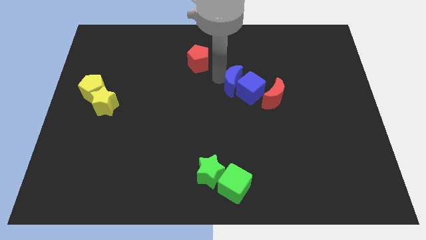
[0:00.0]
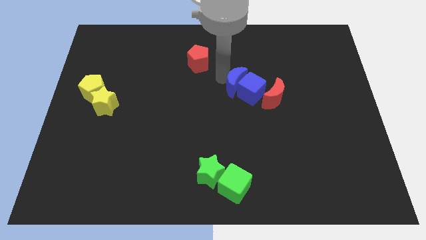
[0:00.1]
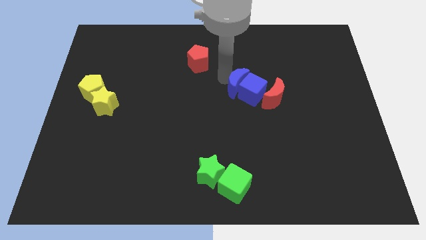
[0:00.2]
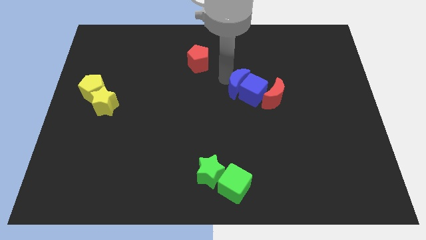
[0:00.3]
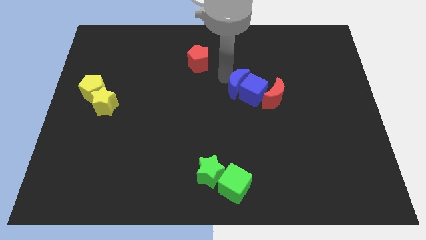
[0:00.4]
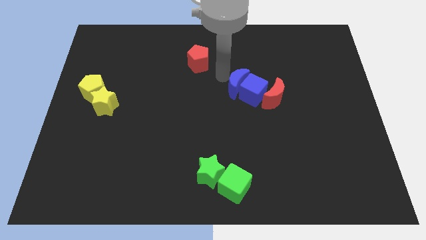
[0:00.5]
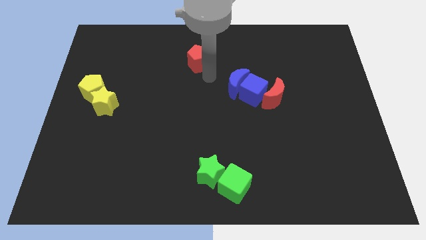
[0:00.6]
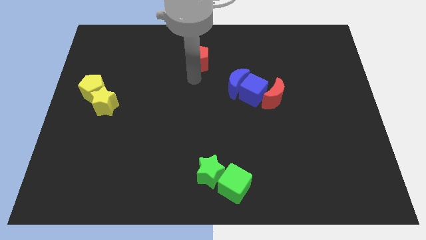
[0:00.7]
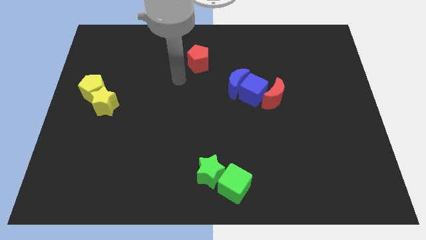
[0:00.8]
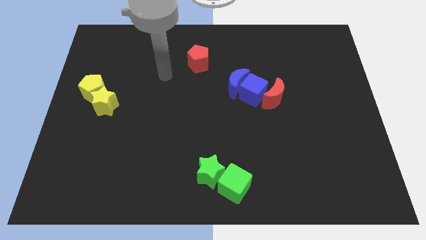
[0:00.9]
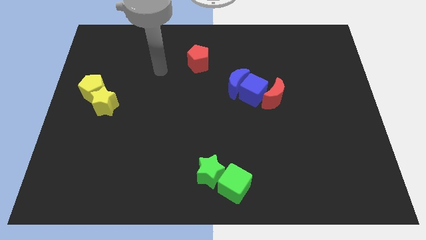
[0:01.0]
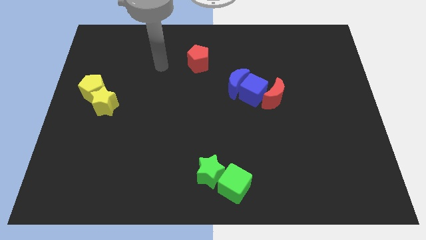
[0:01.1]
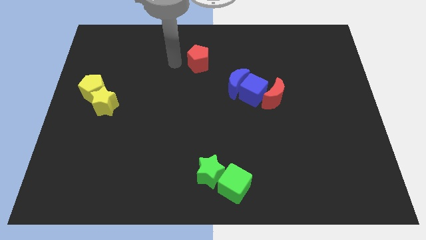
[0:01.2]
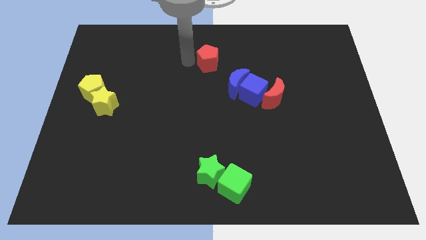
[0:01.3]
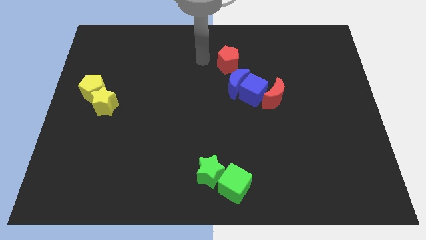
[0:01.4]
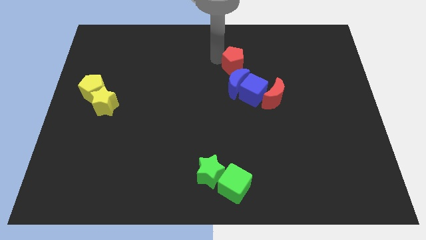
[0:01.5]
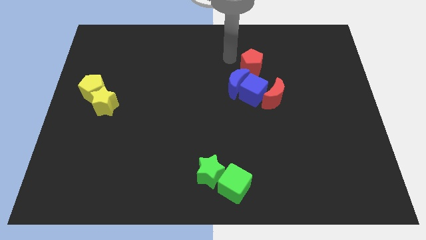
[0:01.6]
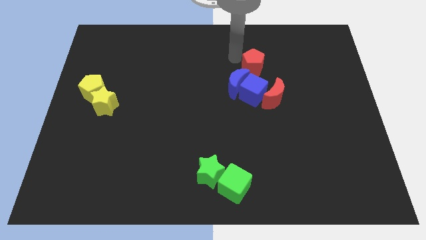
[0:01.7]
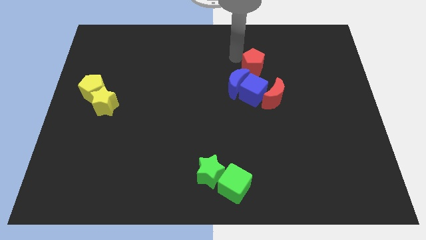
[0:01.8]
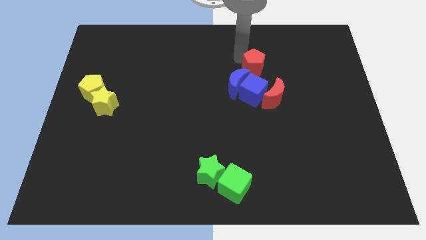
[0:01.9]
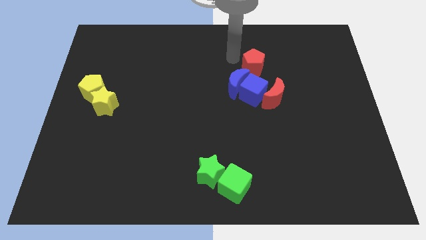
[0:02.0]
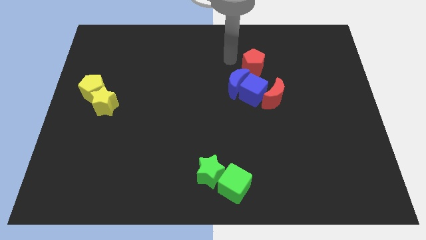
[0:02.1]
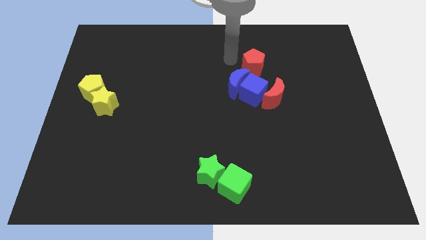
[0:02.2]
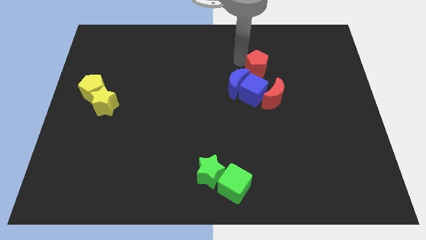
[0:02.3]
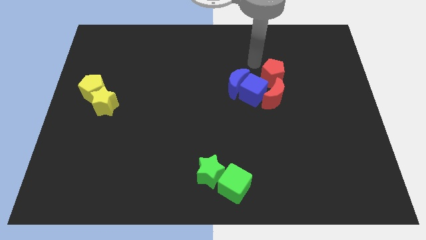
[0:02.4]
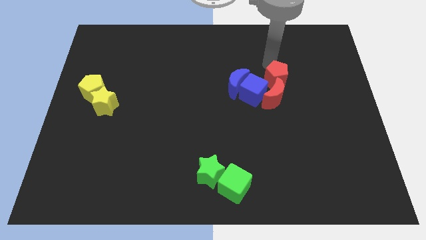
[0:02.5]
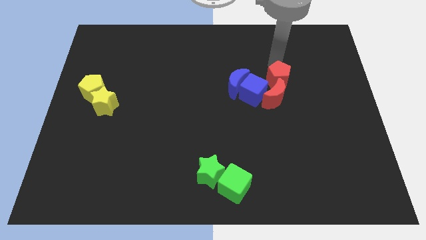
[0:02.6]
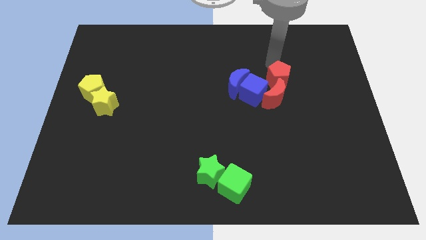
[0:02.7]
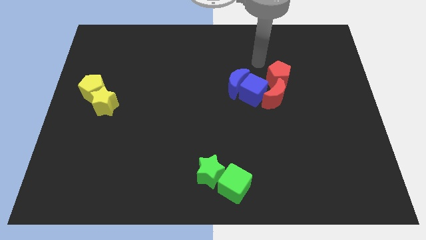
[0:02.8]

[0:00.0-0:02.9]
move red pentagon to the top of red crescent

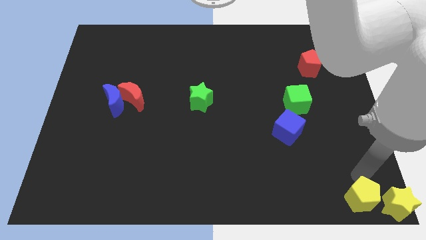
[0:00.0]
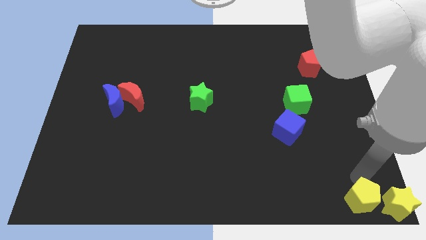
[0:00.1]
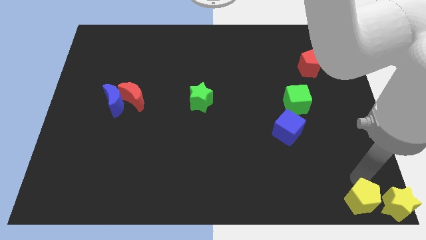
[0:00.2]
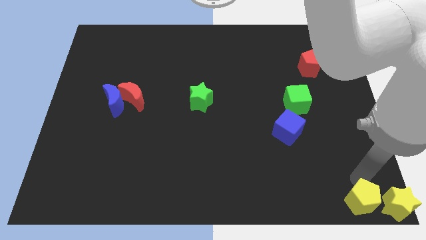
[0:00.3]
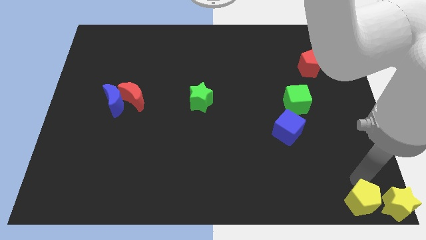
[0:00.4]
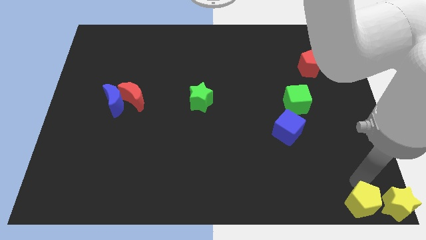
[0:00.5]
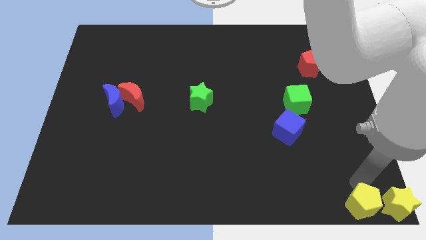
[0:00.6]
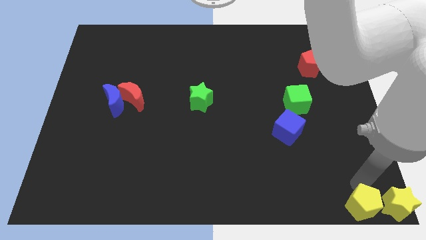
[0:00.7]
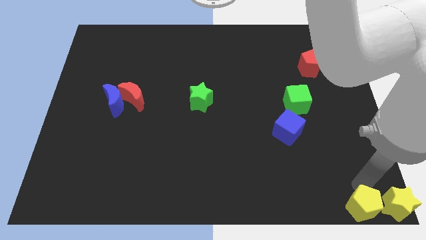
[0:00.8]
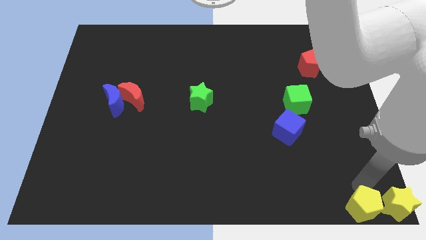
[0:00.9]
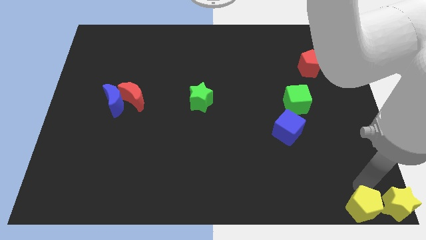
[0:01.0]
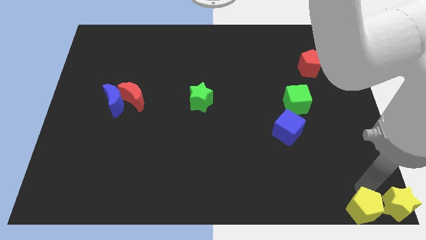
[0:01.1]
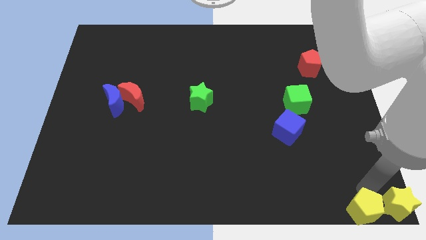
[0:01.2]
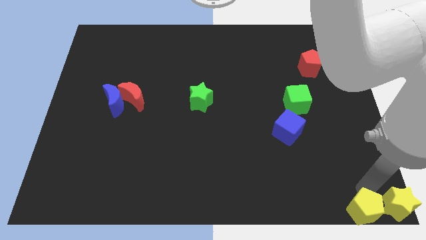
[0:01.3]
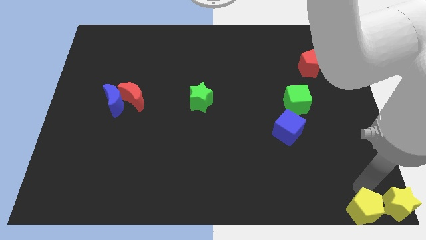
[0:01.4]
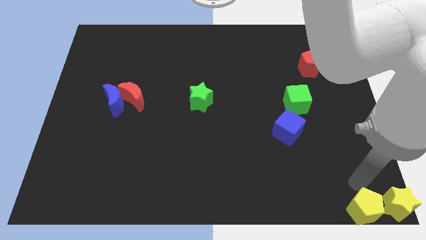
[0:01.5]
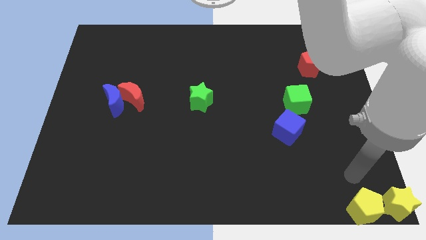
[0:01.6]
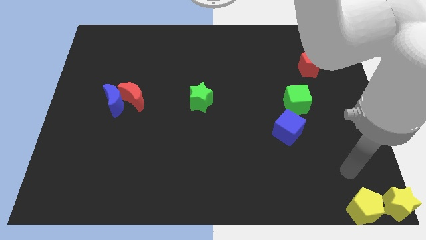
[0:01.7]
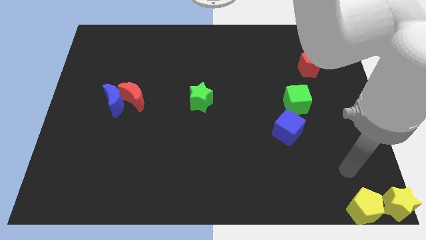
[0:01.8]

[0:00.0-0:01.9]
slide the yellow pentagon to the bottom right of the board

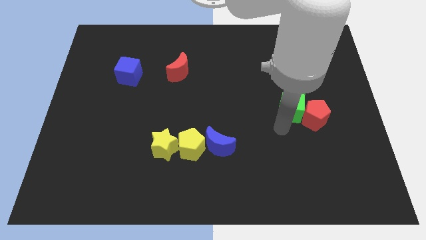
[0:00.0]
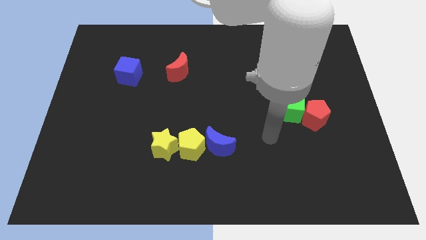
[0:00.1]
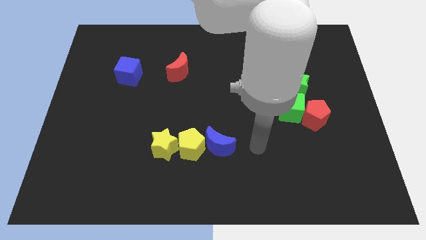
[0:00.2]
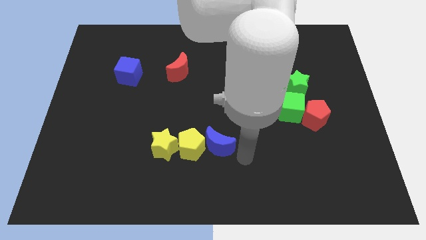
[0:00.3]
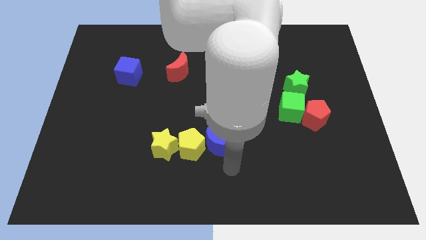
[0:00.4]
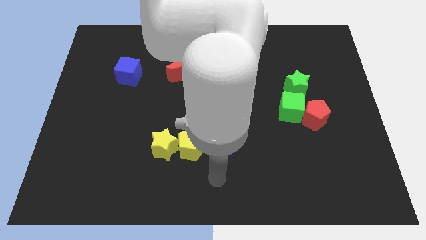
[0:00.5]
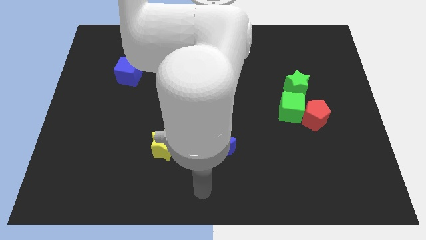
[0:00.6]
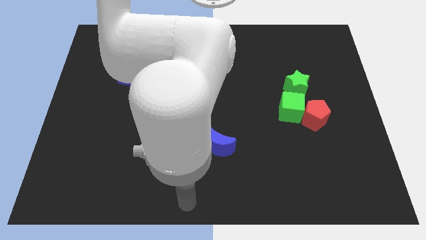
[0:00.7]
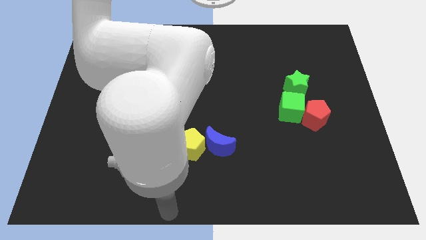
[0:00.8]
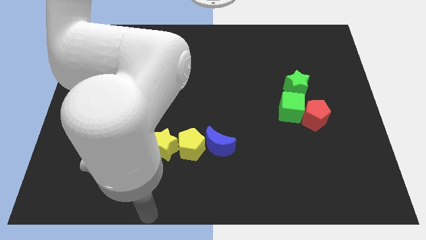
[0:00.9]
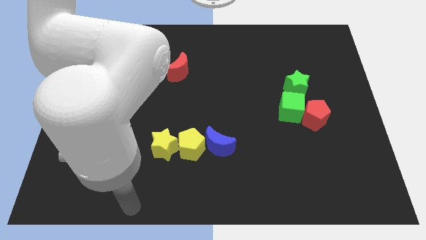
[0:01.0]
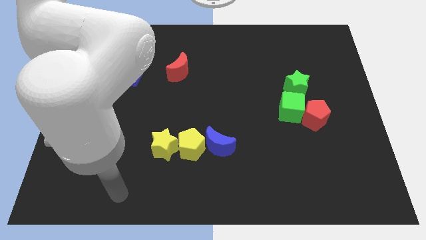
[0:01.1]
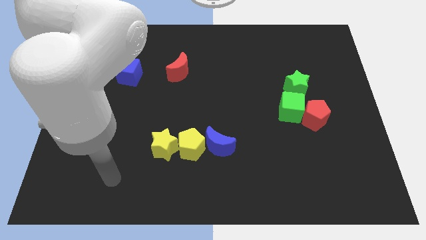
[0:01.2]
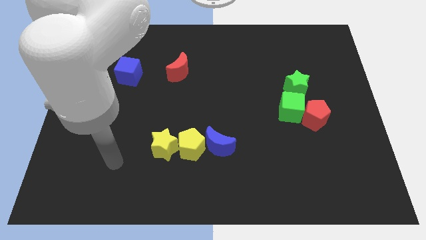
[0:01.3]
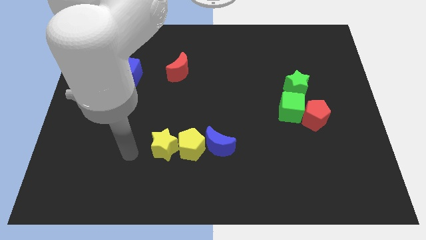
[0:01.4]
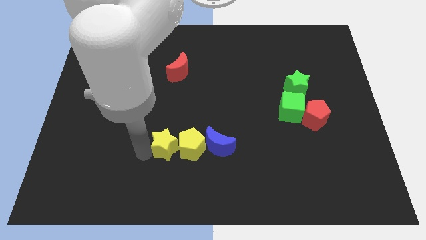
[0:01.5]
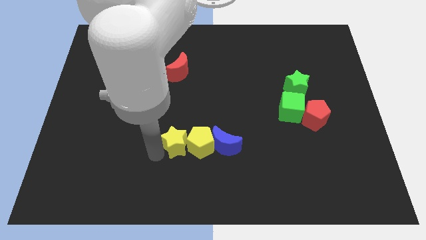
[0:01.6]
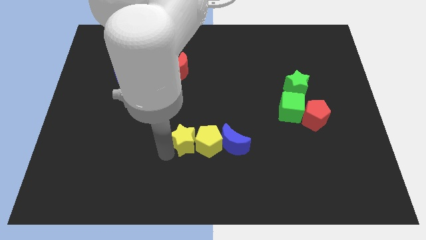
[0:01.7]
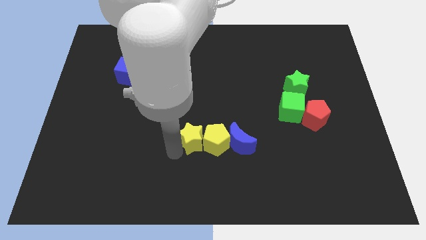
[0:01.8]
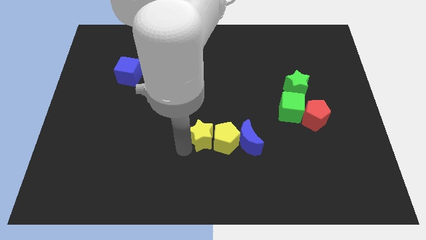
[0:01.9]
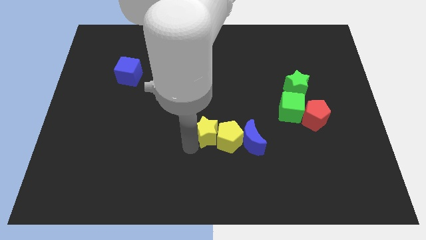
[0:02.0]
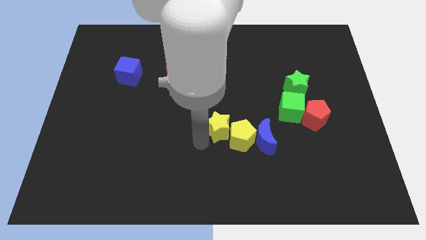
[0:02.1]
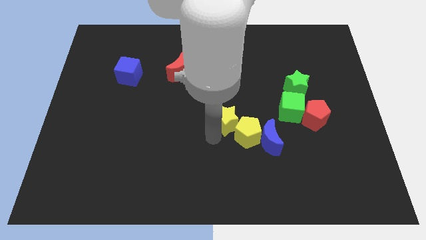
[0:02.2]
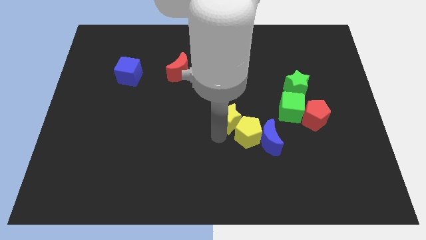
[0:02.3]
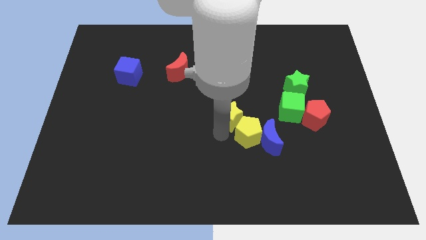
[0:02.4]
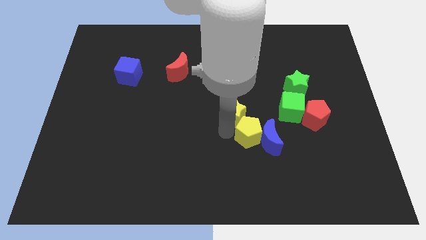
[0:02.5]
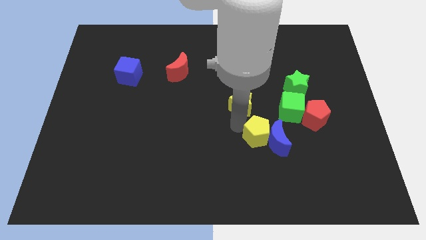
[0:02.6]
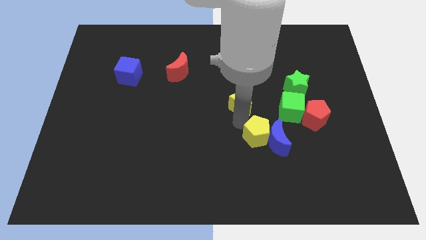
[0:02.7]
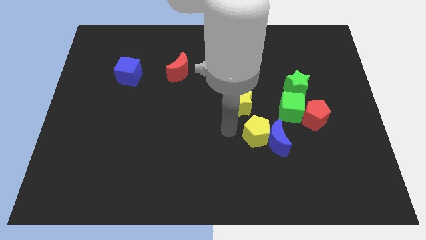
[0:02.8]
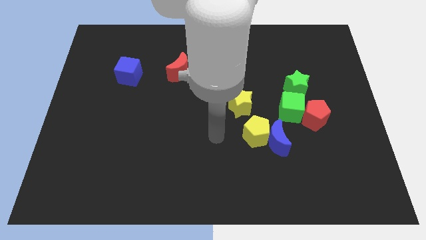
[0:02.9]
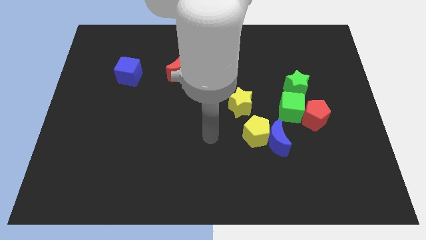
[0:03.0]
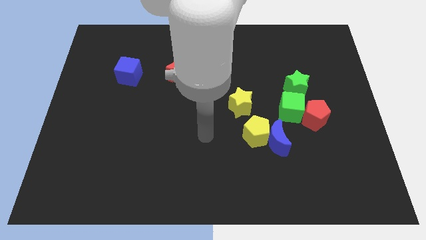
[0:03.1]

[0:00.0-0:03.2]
push the ggroup of blocks towards the center right

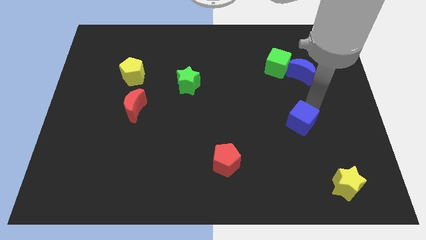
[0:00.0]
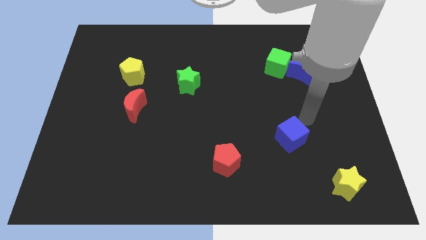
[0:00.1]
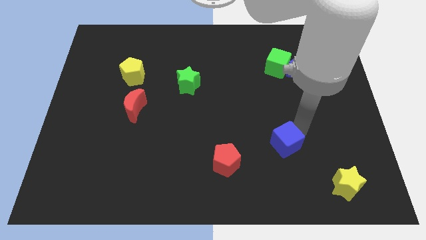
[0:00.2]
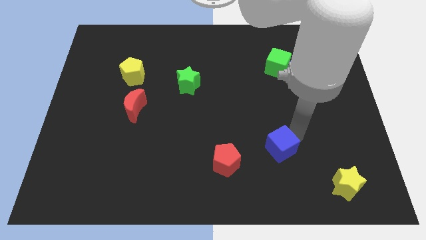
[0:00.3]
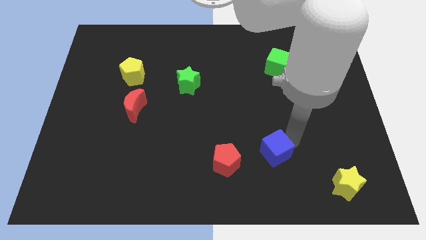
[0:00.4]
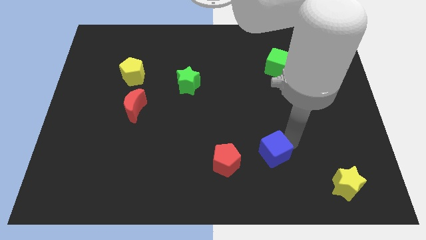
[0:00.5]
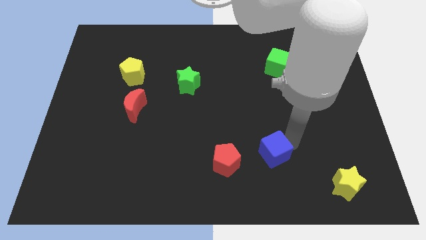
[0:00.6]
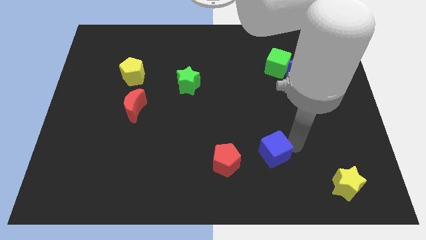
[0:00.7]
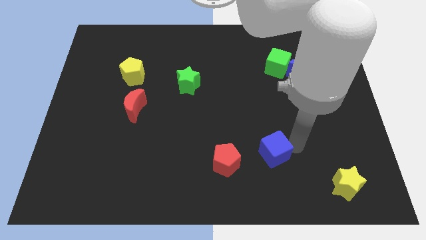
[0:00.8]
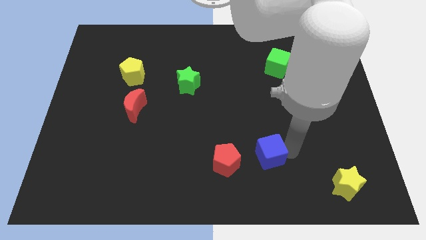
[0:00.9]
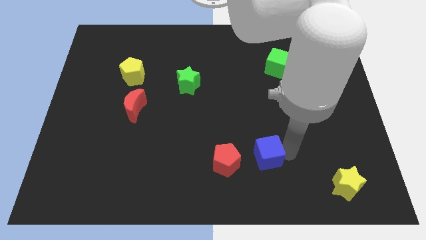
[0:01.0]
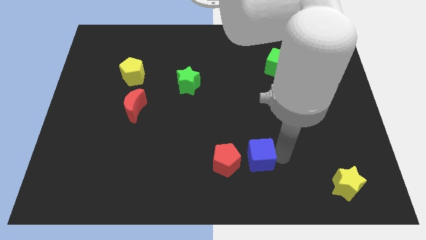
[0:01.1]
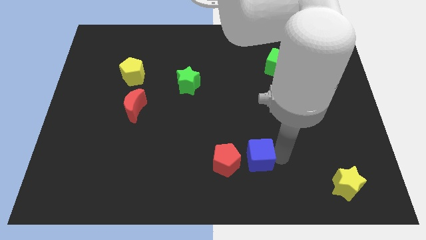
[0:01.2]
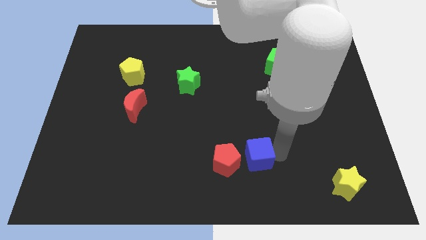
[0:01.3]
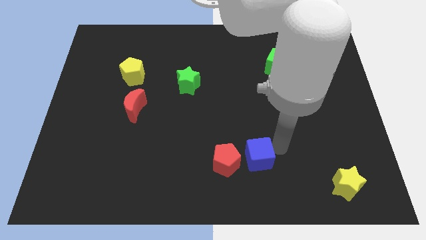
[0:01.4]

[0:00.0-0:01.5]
slide the blue cube close to the right side of the red pentagon
